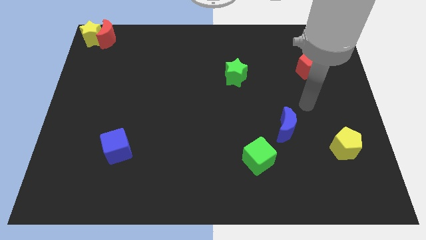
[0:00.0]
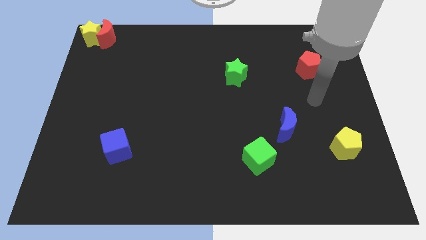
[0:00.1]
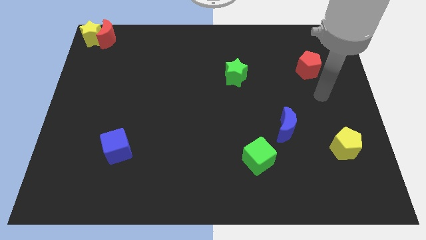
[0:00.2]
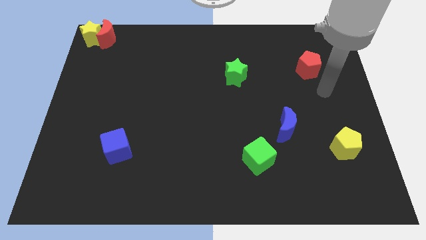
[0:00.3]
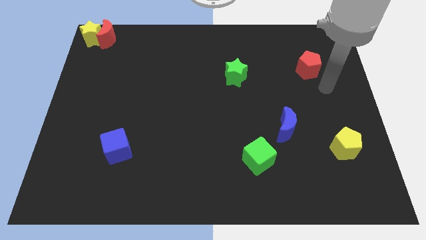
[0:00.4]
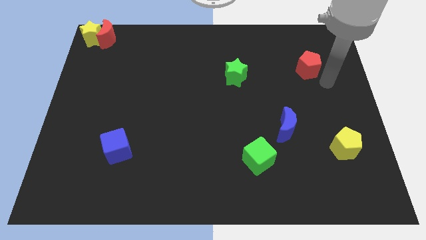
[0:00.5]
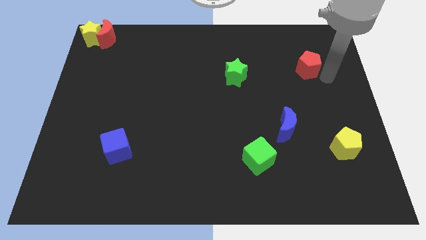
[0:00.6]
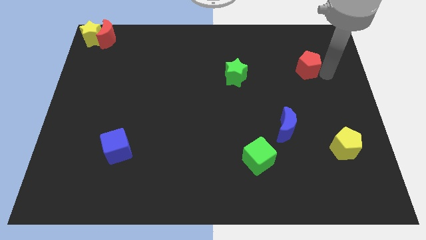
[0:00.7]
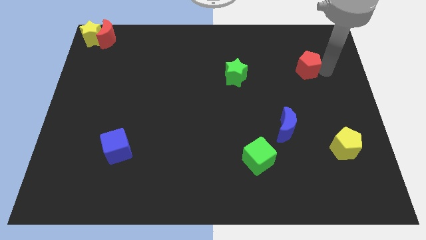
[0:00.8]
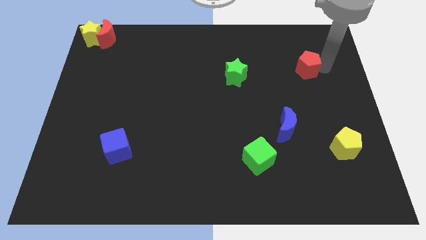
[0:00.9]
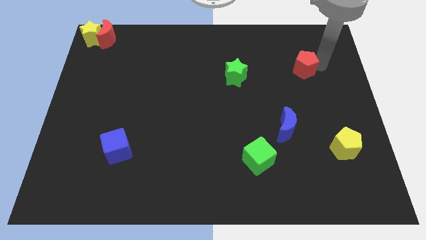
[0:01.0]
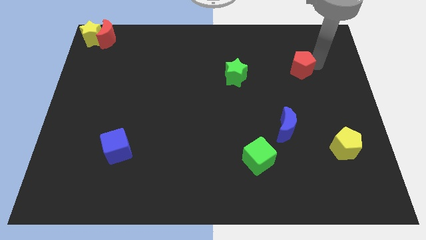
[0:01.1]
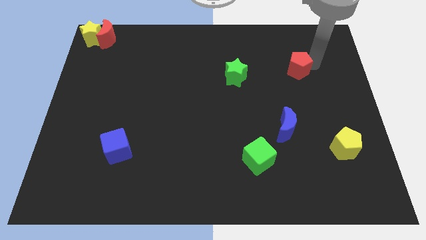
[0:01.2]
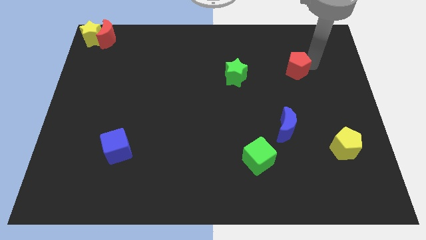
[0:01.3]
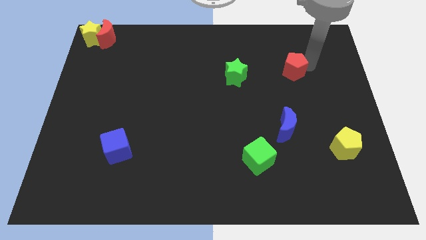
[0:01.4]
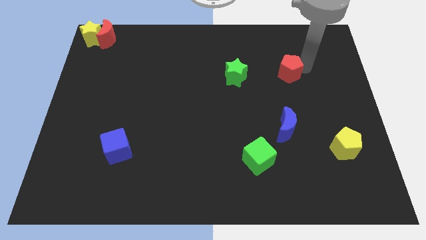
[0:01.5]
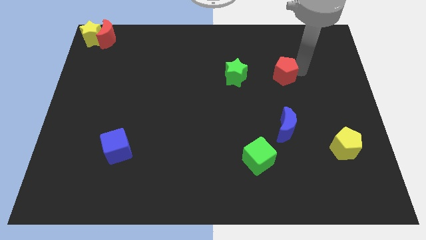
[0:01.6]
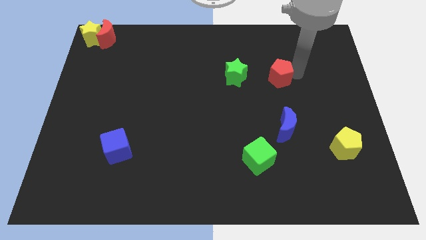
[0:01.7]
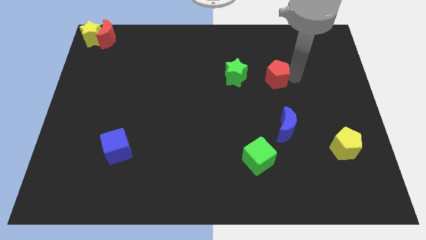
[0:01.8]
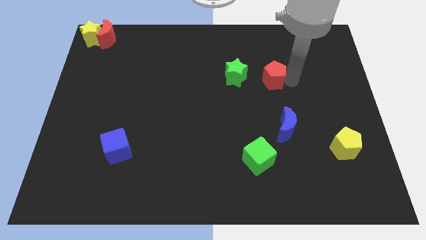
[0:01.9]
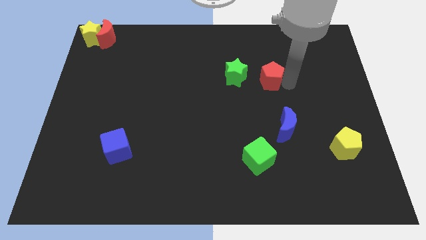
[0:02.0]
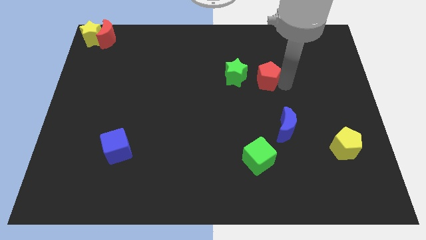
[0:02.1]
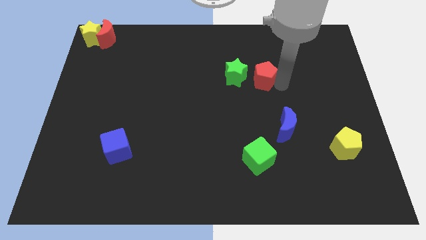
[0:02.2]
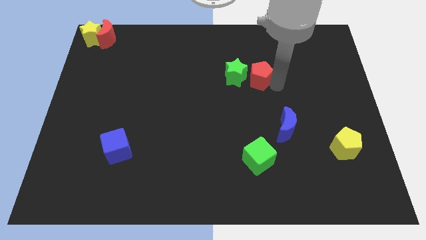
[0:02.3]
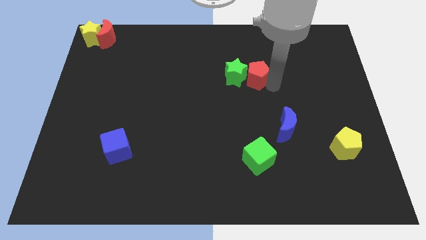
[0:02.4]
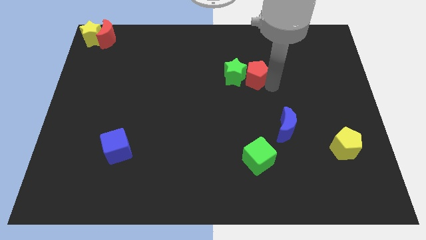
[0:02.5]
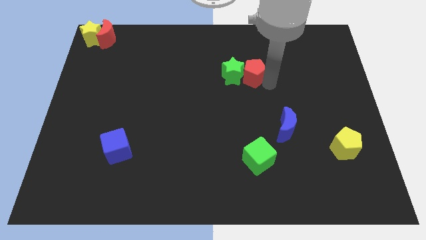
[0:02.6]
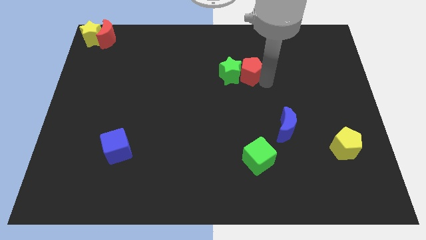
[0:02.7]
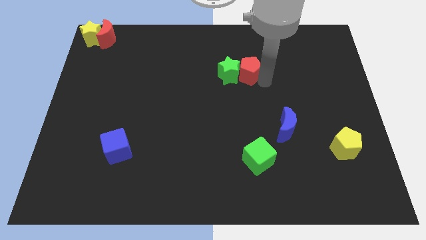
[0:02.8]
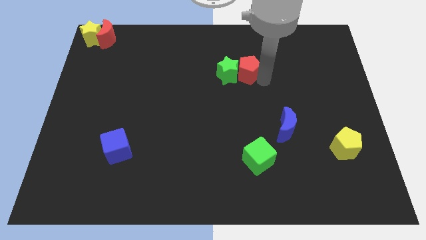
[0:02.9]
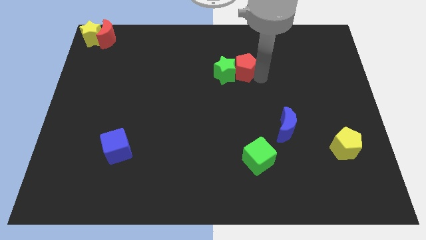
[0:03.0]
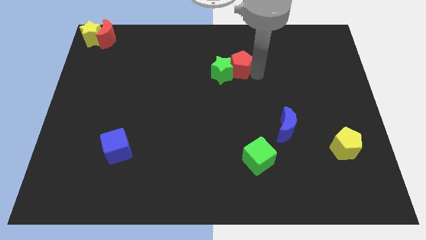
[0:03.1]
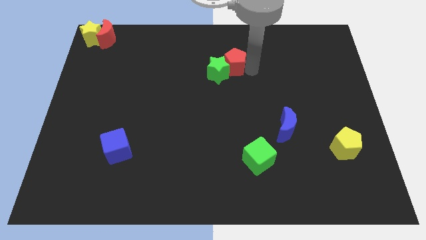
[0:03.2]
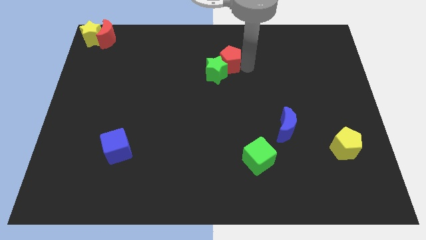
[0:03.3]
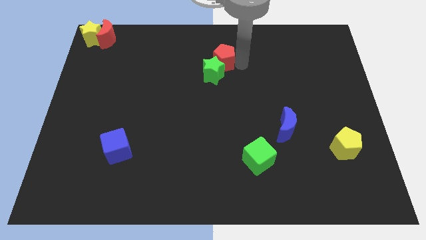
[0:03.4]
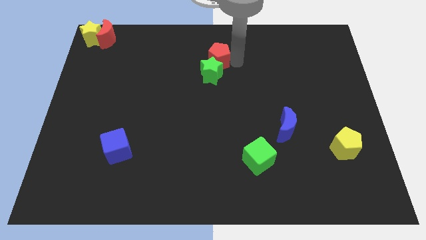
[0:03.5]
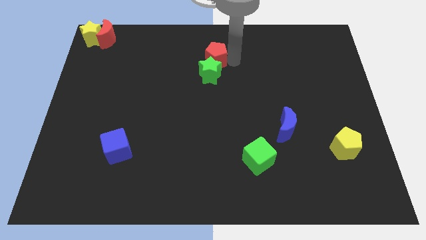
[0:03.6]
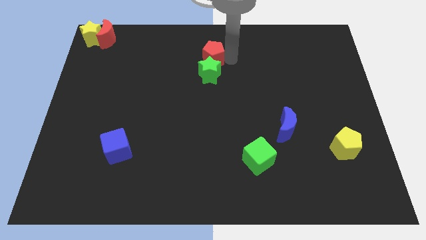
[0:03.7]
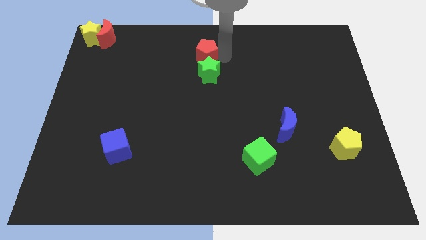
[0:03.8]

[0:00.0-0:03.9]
push the red pentagon and green star towards the left side of the board

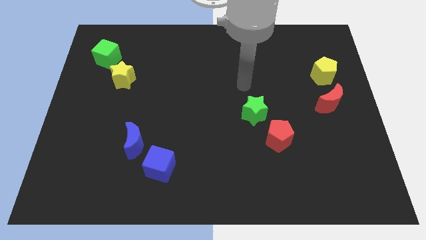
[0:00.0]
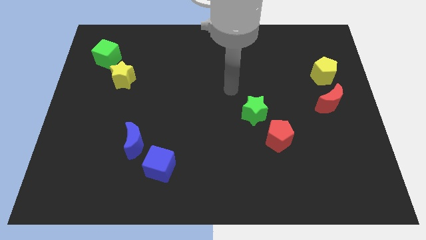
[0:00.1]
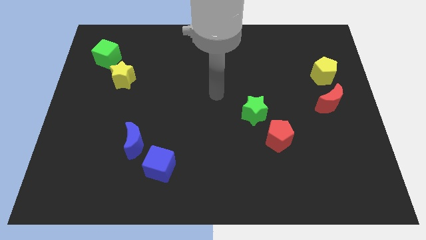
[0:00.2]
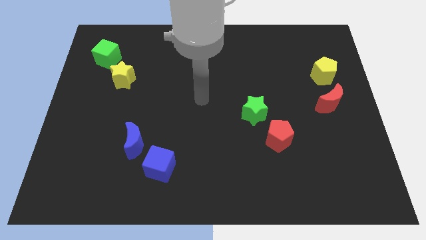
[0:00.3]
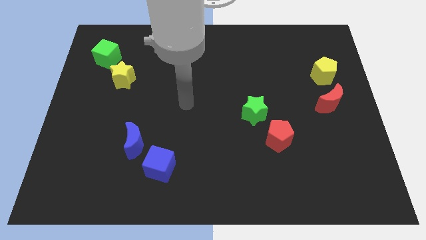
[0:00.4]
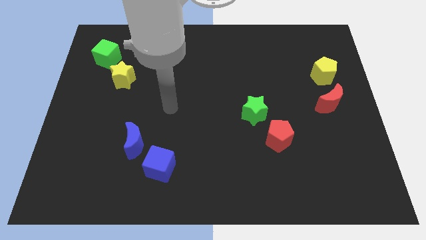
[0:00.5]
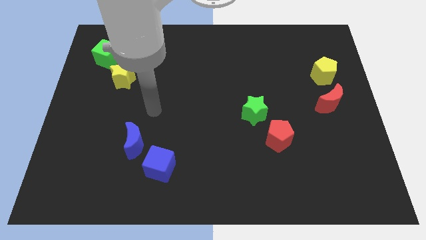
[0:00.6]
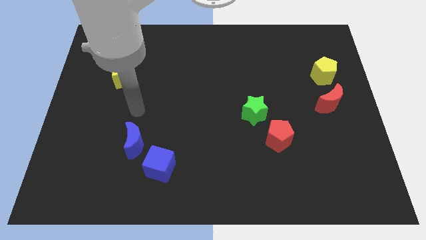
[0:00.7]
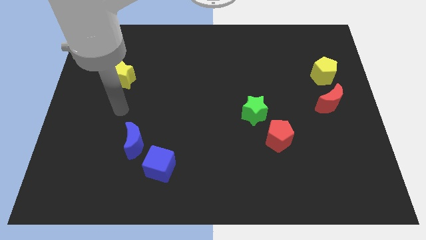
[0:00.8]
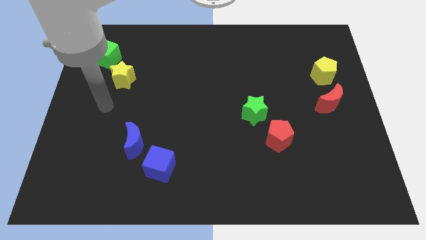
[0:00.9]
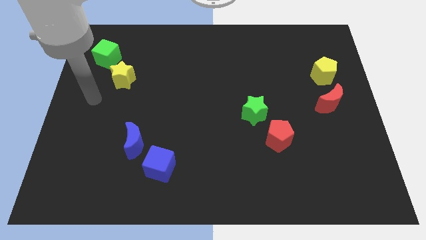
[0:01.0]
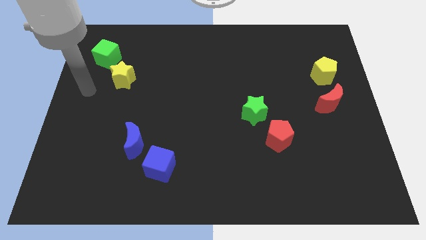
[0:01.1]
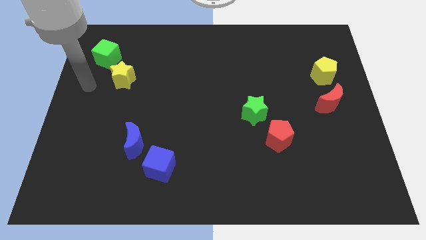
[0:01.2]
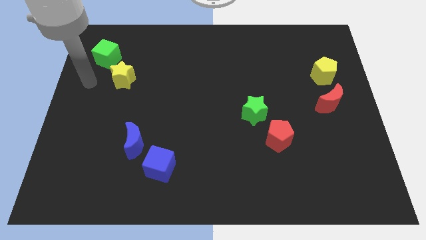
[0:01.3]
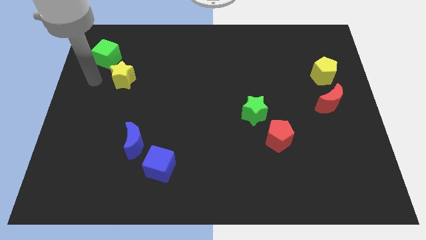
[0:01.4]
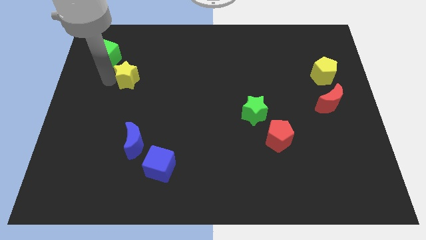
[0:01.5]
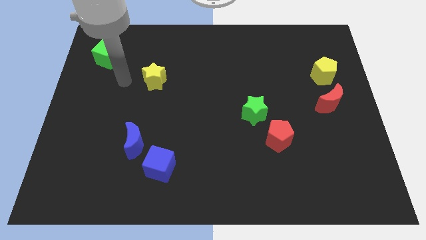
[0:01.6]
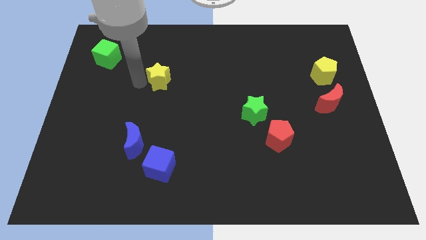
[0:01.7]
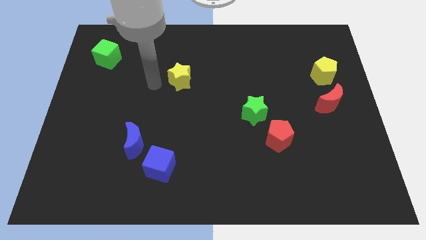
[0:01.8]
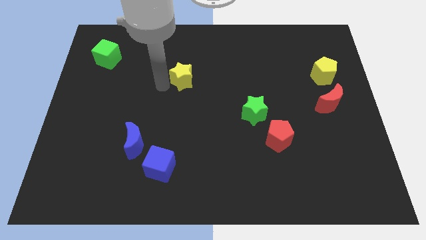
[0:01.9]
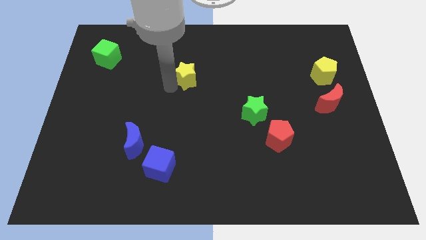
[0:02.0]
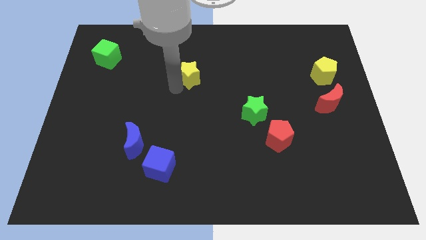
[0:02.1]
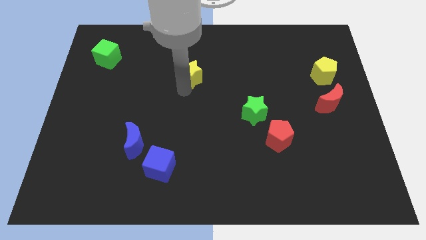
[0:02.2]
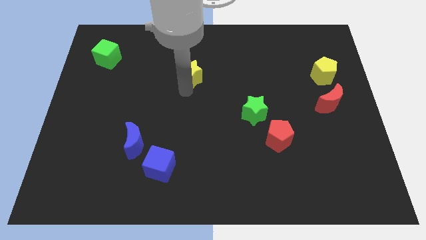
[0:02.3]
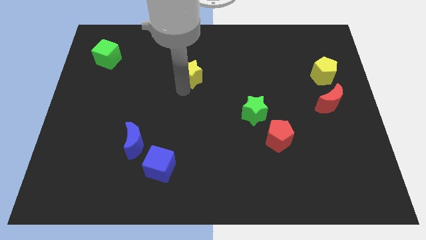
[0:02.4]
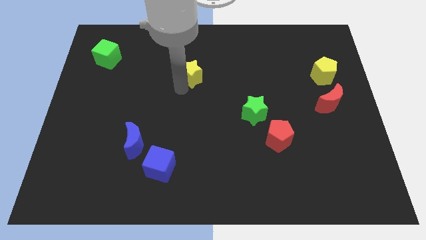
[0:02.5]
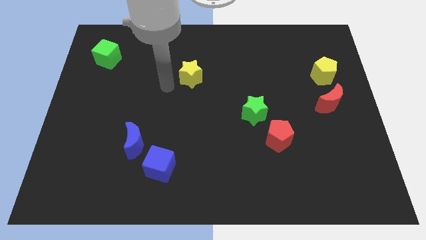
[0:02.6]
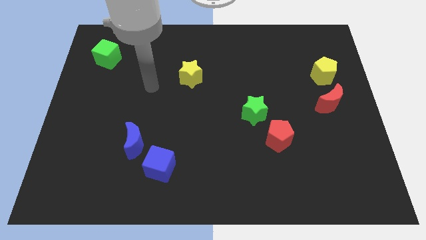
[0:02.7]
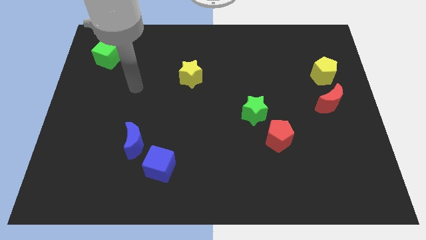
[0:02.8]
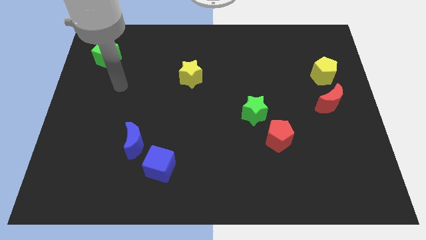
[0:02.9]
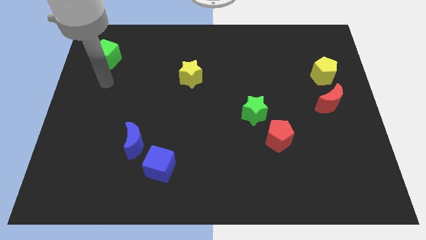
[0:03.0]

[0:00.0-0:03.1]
move yellow star away from the green cube

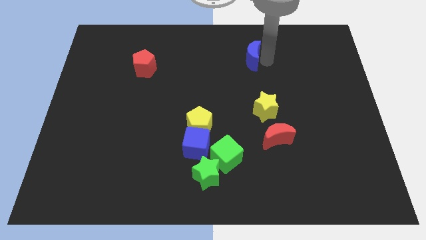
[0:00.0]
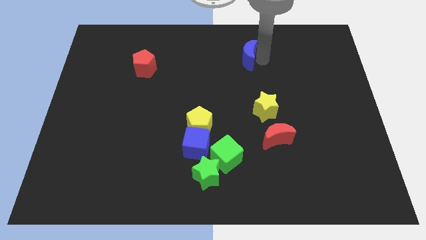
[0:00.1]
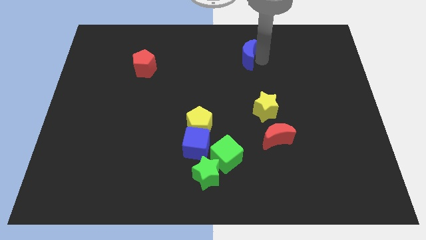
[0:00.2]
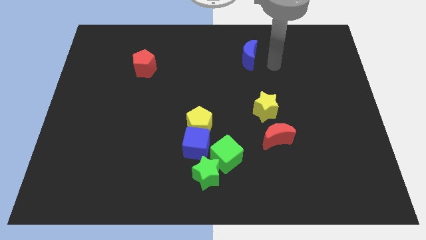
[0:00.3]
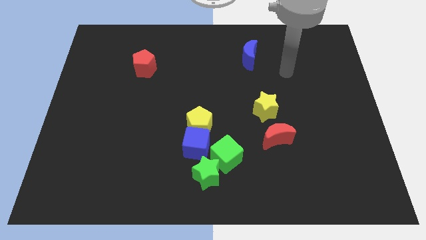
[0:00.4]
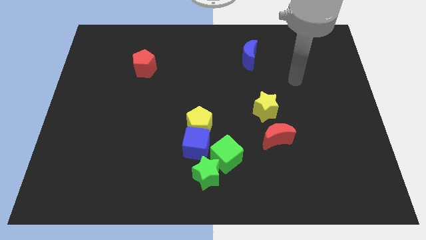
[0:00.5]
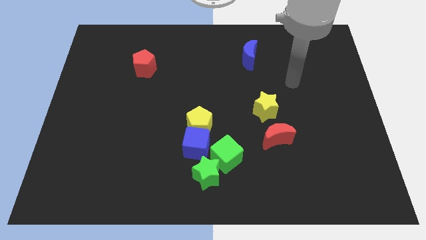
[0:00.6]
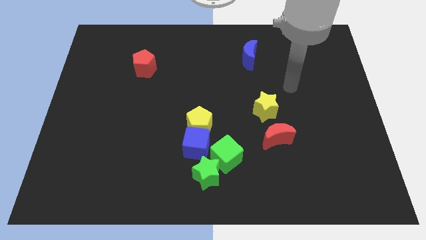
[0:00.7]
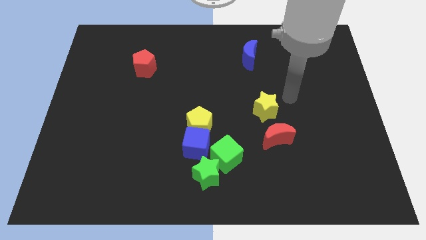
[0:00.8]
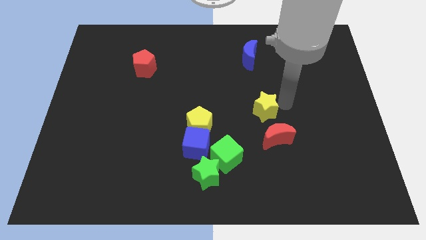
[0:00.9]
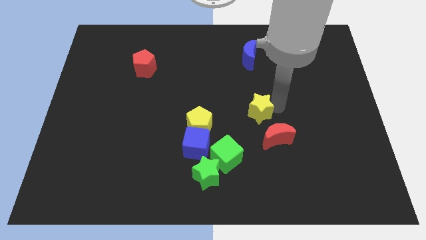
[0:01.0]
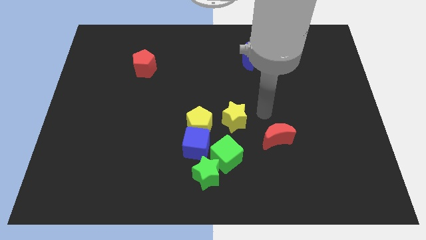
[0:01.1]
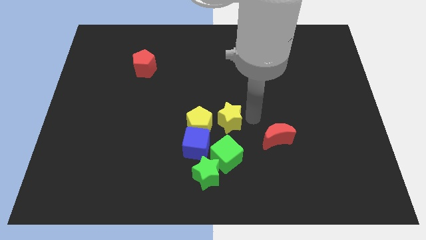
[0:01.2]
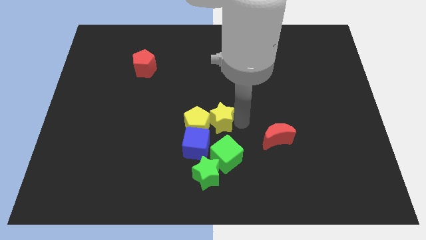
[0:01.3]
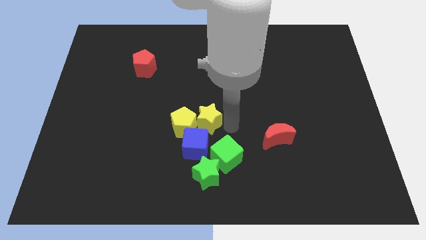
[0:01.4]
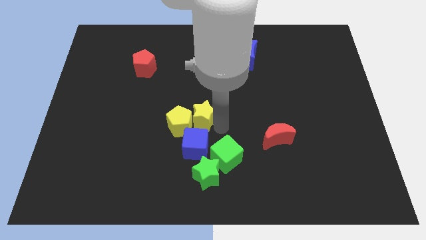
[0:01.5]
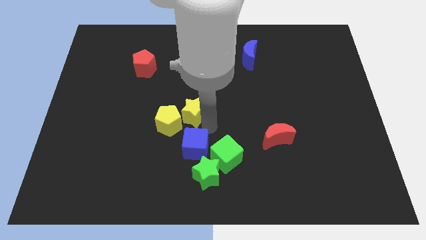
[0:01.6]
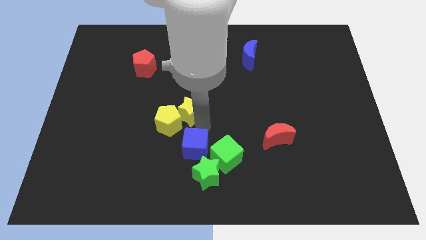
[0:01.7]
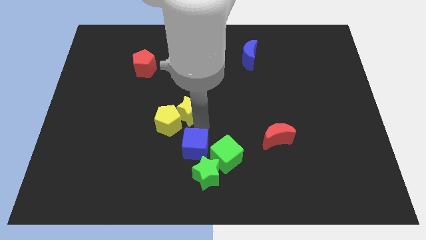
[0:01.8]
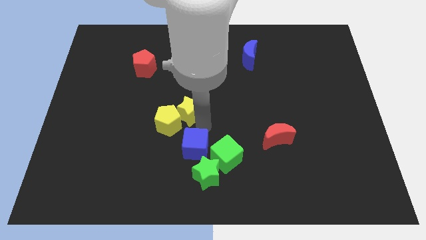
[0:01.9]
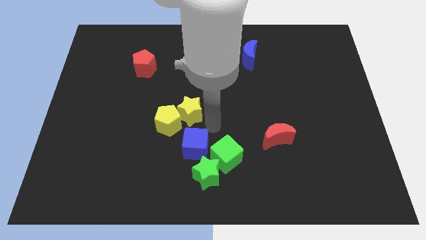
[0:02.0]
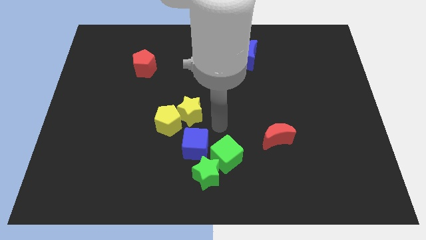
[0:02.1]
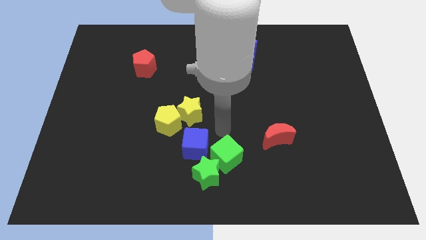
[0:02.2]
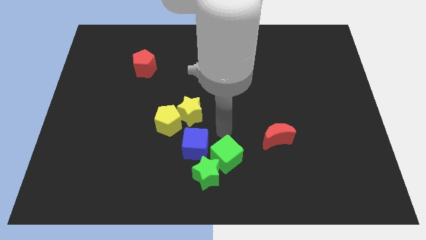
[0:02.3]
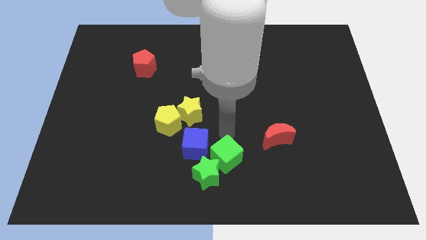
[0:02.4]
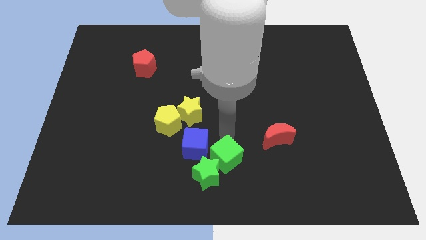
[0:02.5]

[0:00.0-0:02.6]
move the yellow star into the right side of the yellow pentagon
